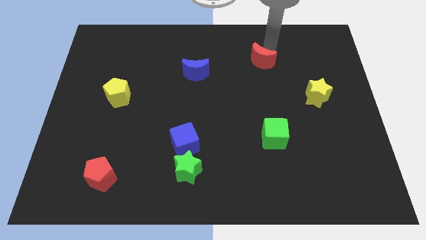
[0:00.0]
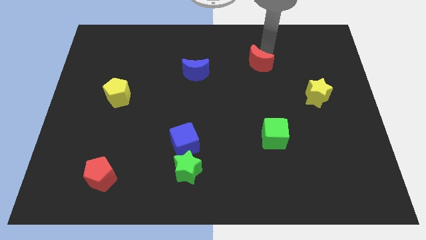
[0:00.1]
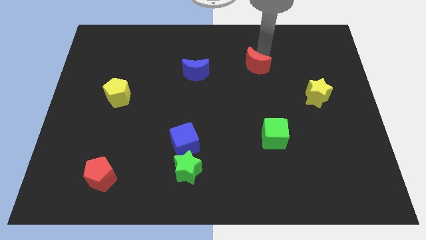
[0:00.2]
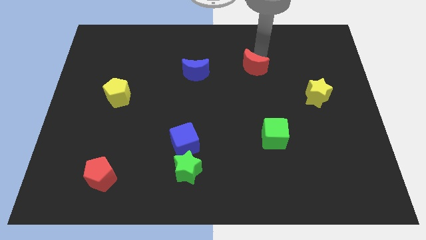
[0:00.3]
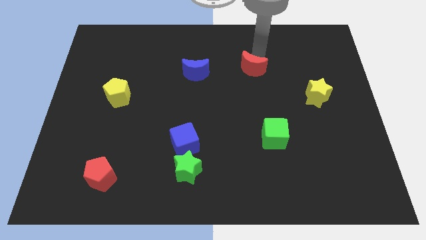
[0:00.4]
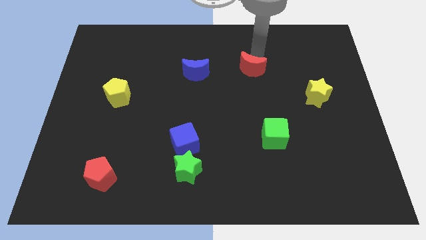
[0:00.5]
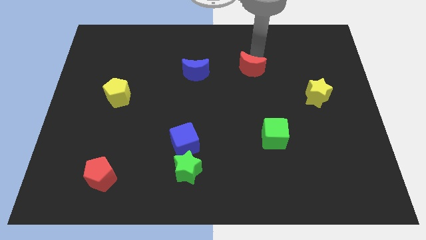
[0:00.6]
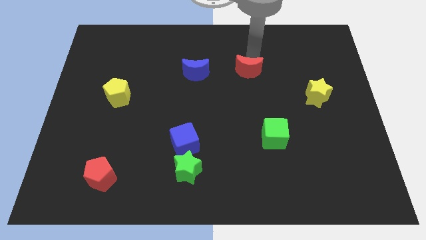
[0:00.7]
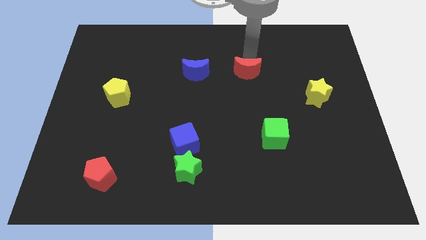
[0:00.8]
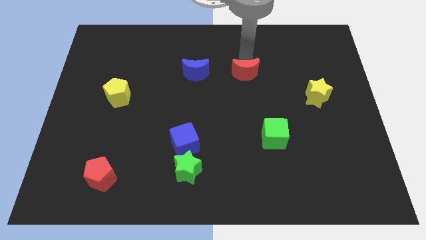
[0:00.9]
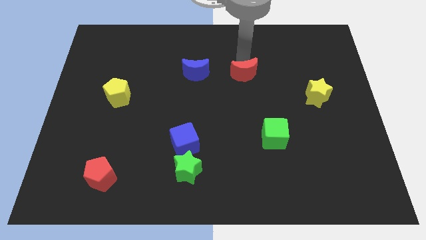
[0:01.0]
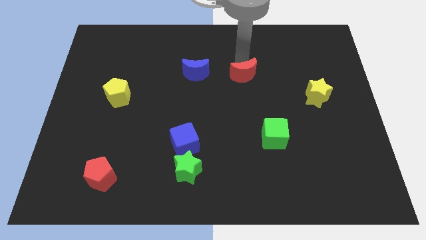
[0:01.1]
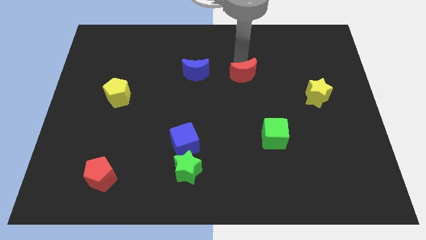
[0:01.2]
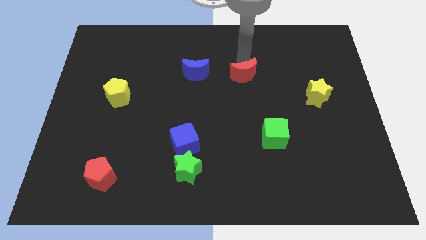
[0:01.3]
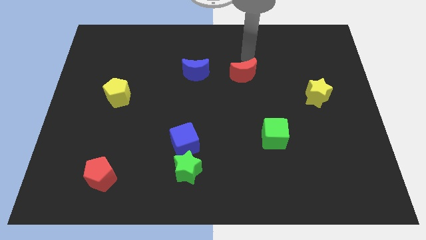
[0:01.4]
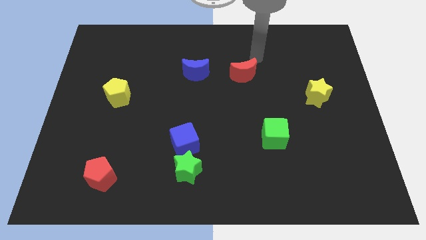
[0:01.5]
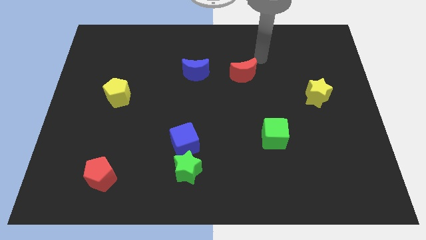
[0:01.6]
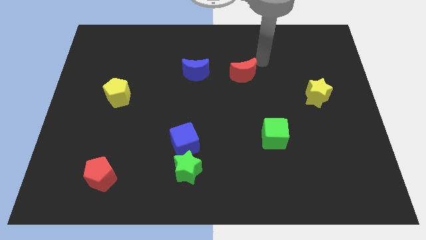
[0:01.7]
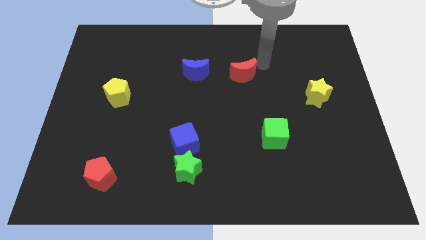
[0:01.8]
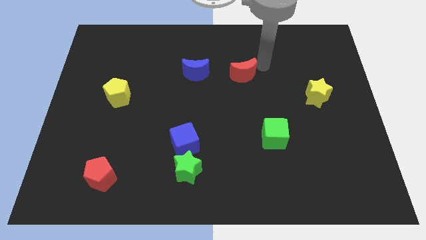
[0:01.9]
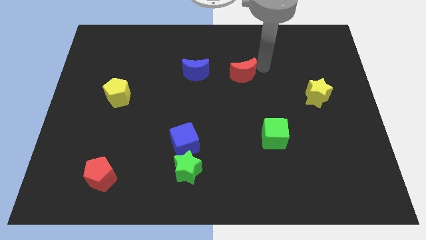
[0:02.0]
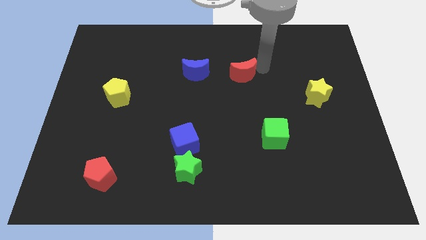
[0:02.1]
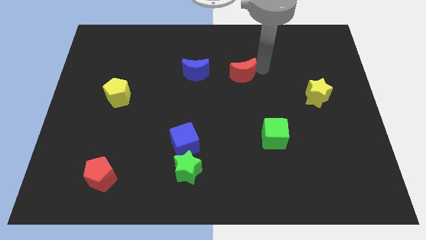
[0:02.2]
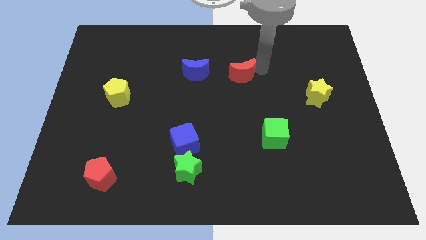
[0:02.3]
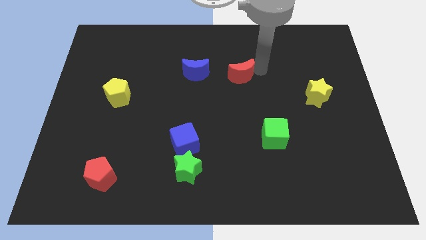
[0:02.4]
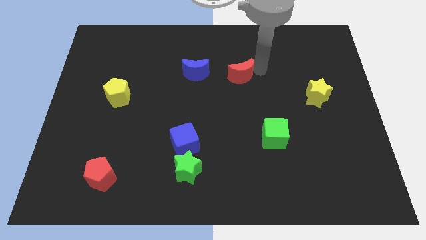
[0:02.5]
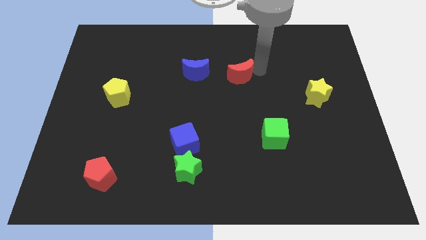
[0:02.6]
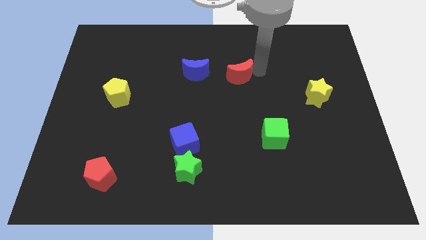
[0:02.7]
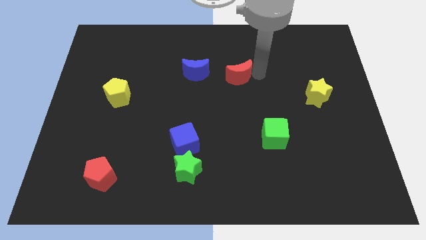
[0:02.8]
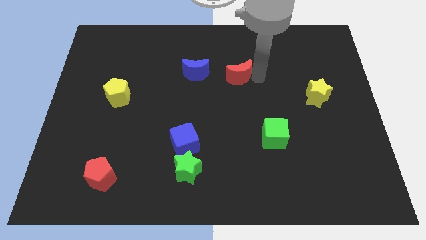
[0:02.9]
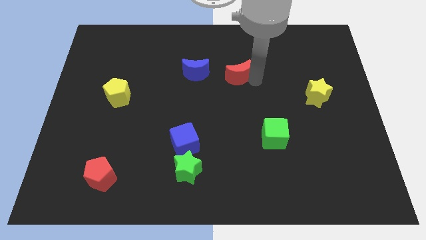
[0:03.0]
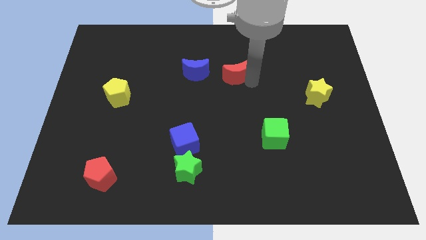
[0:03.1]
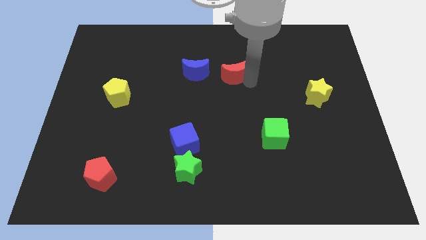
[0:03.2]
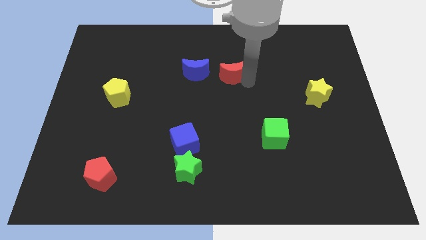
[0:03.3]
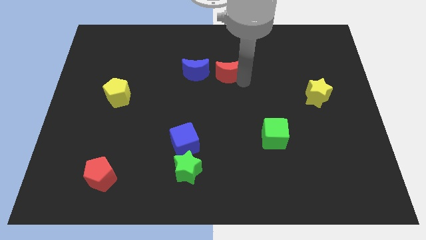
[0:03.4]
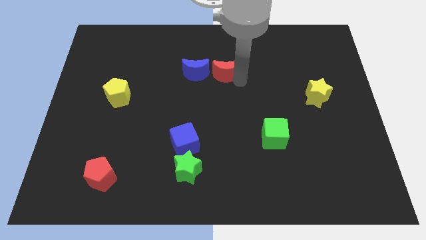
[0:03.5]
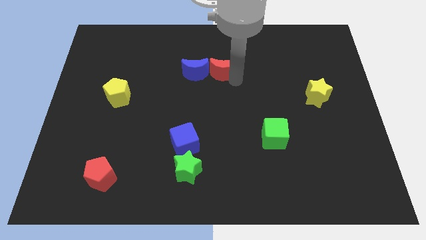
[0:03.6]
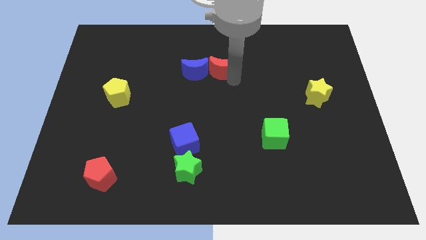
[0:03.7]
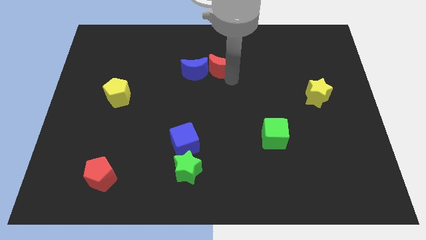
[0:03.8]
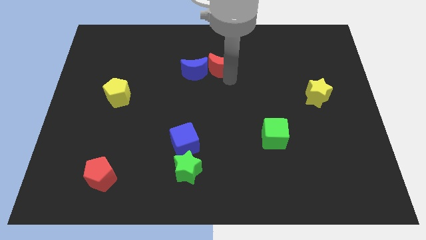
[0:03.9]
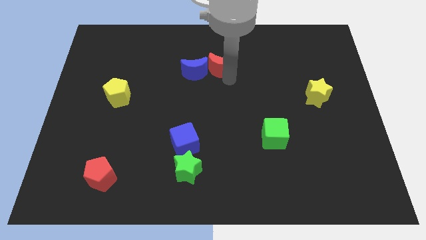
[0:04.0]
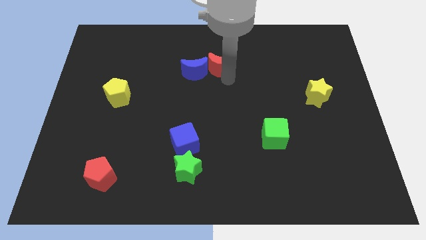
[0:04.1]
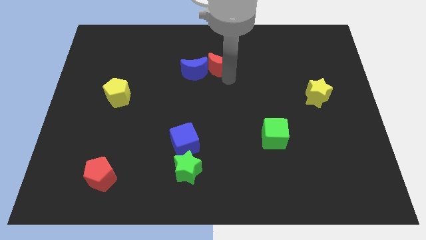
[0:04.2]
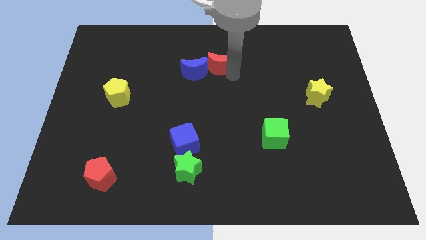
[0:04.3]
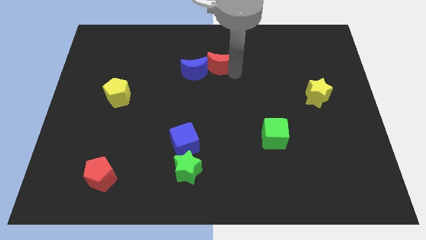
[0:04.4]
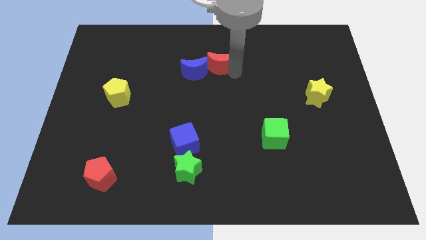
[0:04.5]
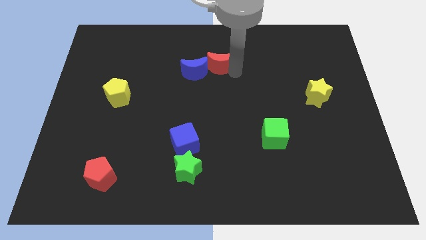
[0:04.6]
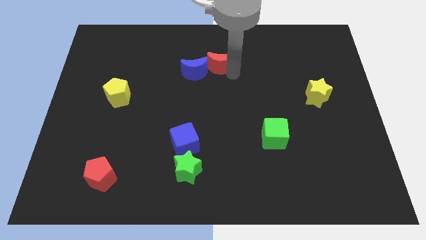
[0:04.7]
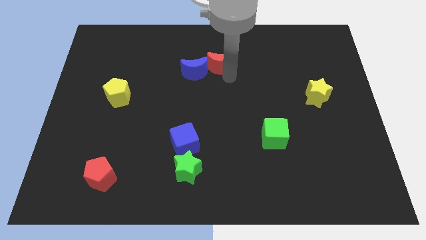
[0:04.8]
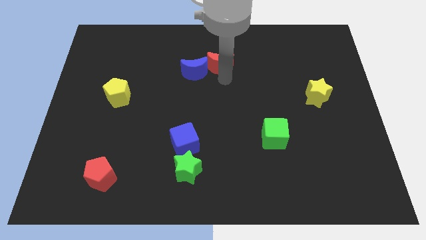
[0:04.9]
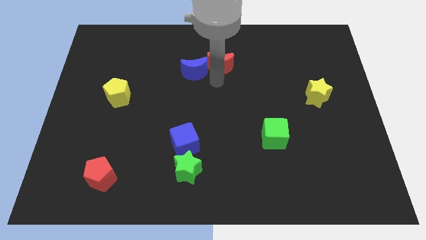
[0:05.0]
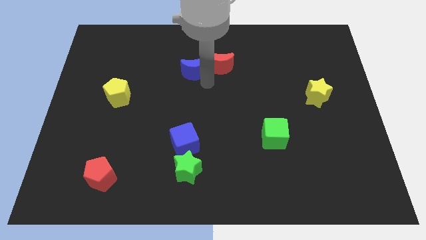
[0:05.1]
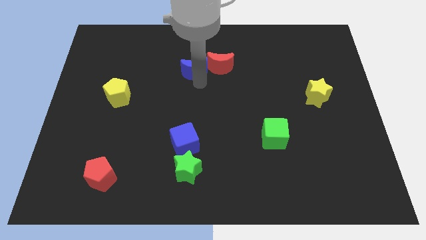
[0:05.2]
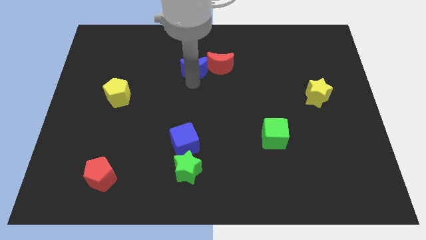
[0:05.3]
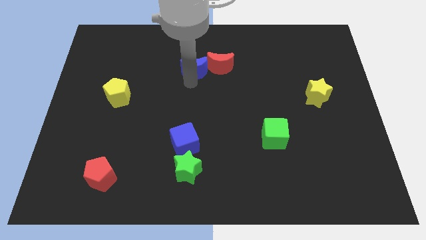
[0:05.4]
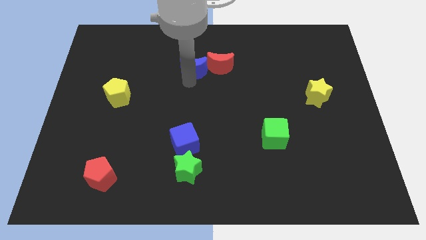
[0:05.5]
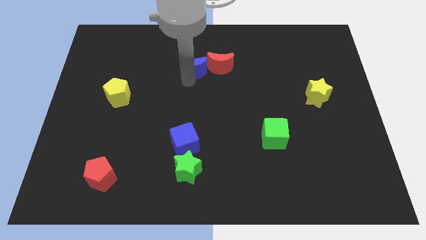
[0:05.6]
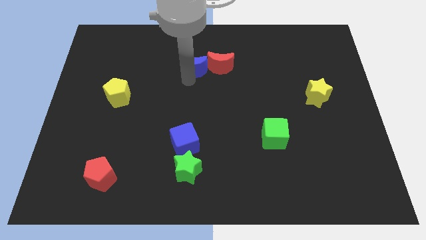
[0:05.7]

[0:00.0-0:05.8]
move the red crescent into the blue crescent

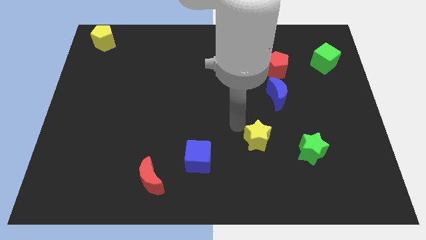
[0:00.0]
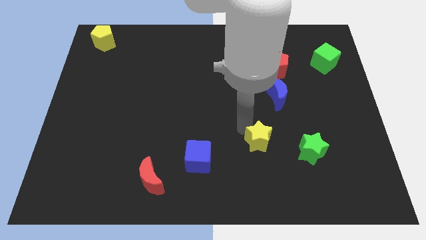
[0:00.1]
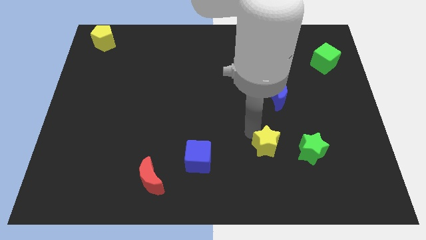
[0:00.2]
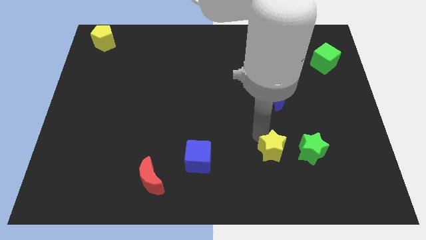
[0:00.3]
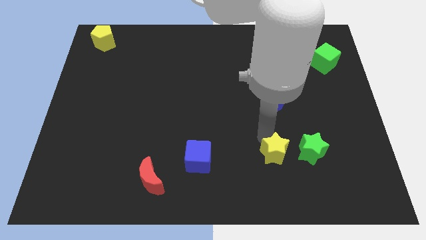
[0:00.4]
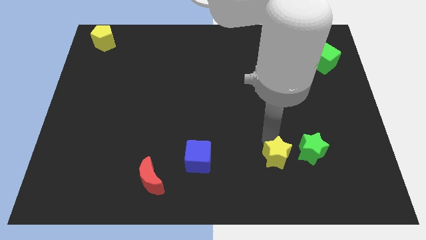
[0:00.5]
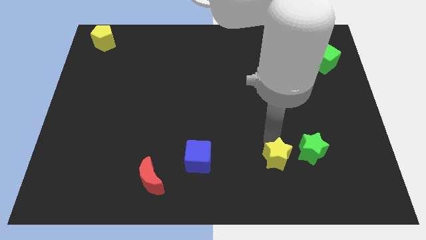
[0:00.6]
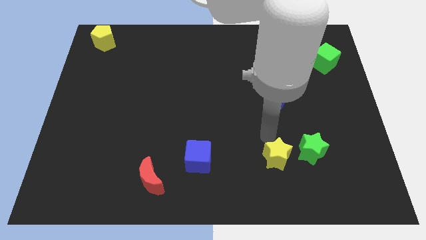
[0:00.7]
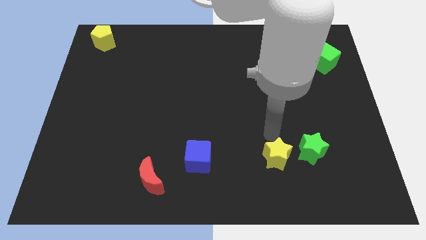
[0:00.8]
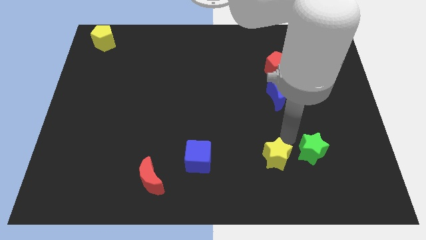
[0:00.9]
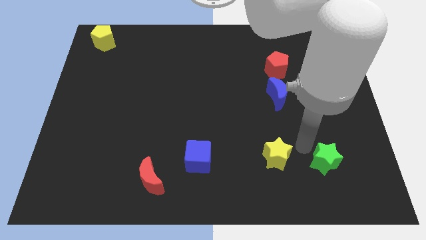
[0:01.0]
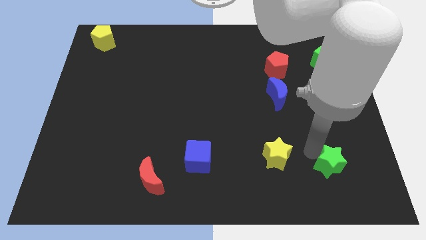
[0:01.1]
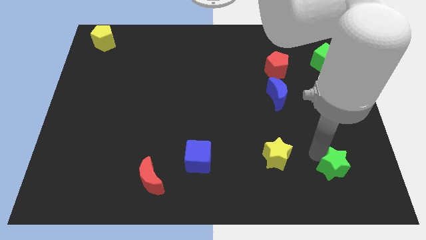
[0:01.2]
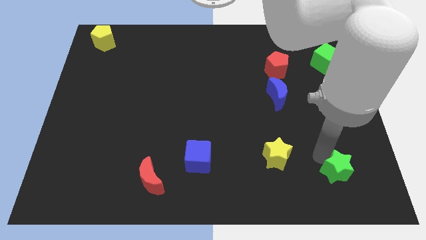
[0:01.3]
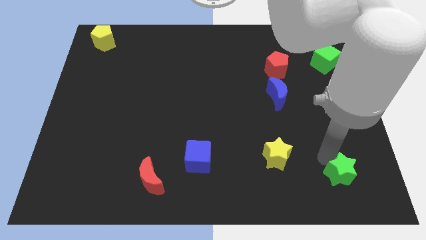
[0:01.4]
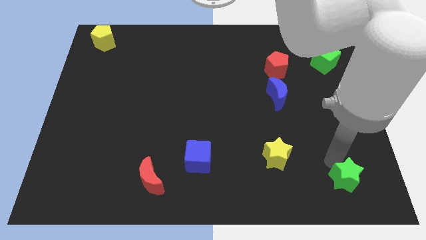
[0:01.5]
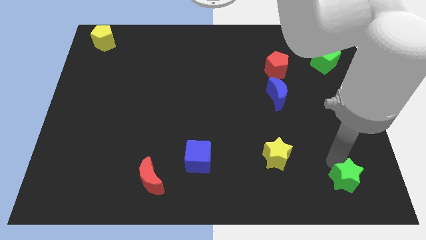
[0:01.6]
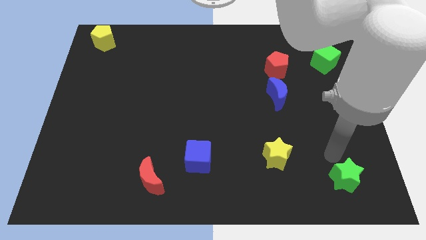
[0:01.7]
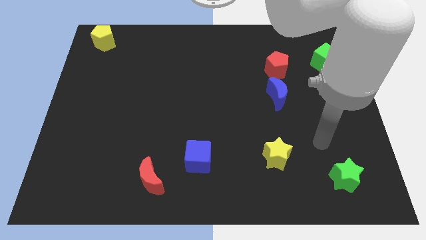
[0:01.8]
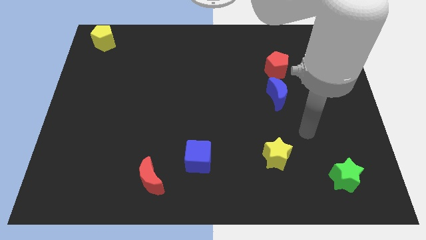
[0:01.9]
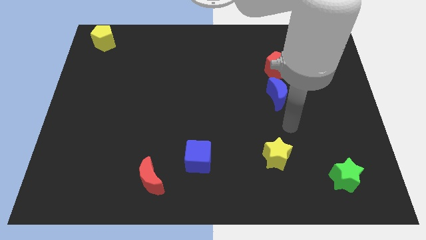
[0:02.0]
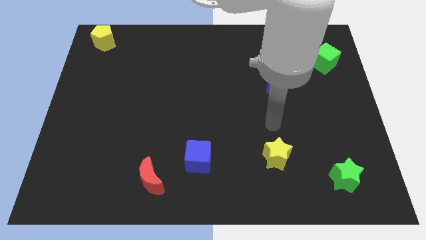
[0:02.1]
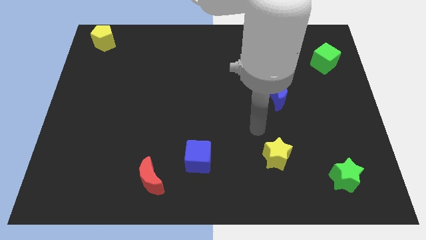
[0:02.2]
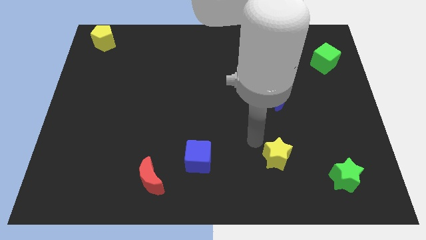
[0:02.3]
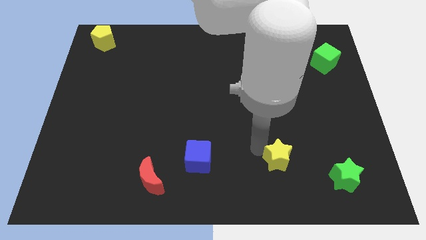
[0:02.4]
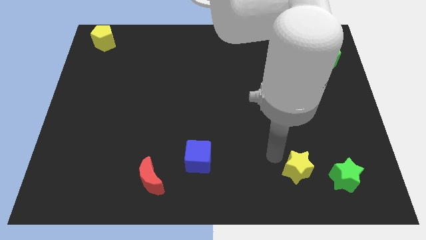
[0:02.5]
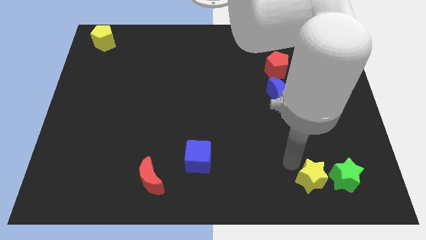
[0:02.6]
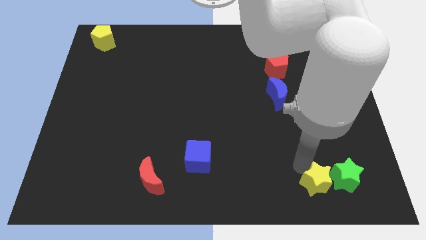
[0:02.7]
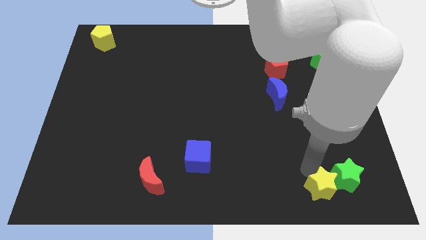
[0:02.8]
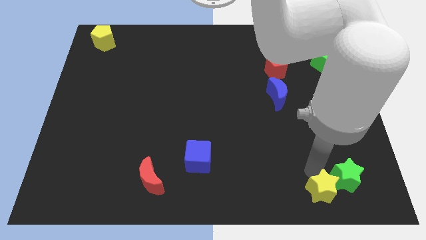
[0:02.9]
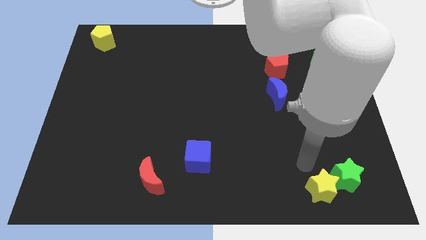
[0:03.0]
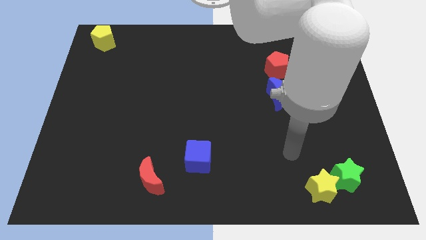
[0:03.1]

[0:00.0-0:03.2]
push the yellow star and green star to the bottom right of the table
